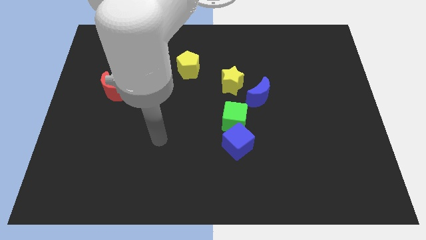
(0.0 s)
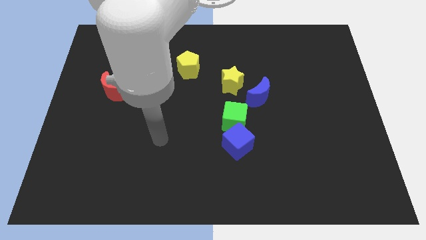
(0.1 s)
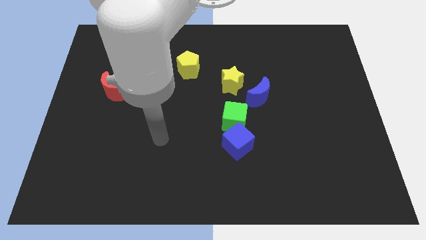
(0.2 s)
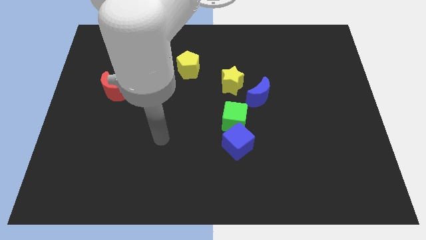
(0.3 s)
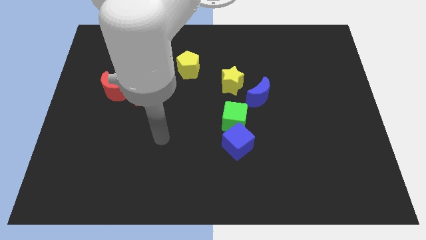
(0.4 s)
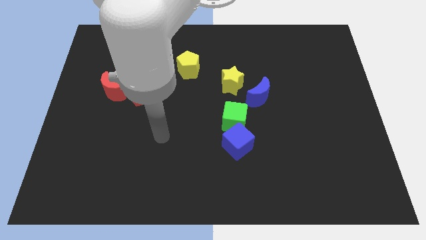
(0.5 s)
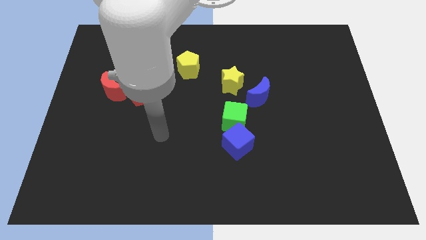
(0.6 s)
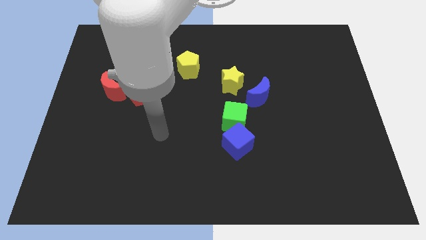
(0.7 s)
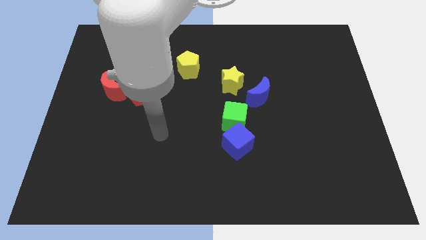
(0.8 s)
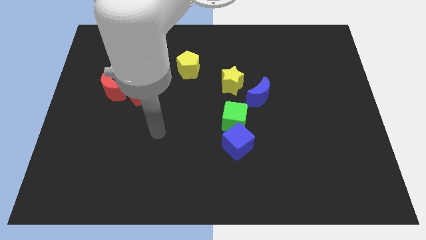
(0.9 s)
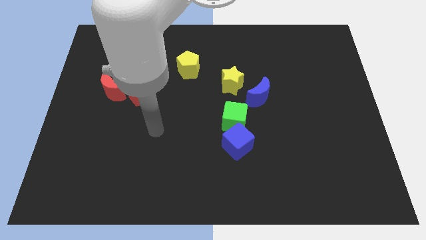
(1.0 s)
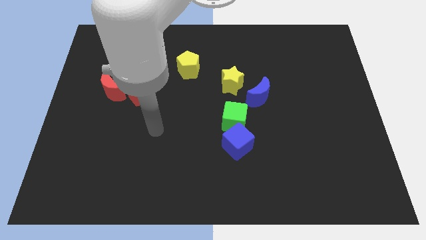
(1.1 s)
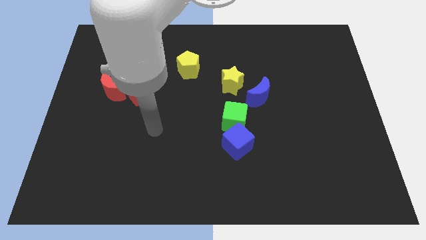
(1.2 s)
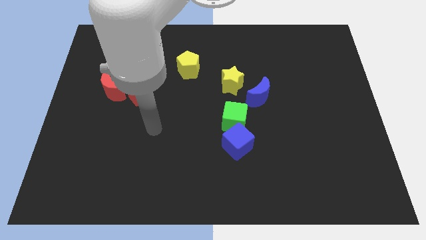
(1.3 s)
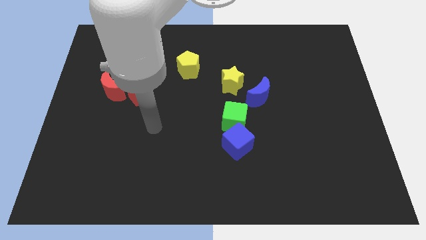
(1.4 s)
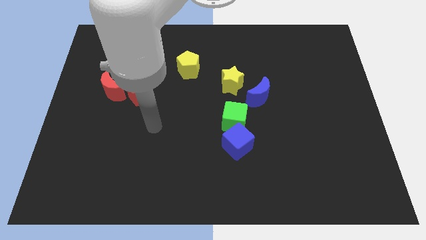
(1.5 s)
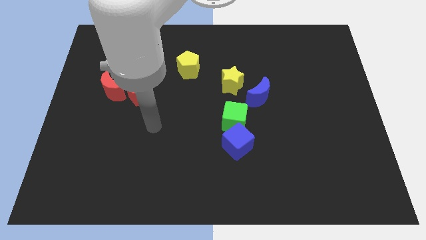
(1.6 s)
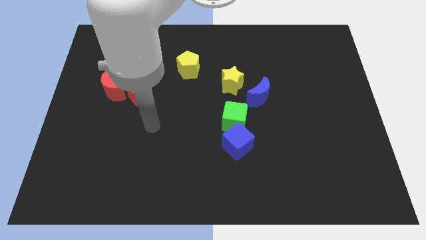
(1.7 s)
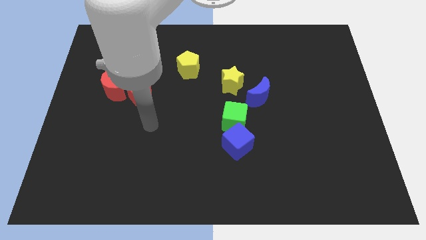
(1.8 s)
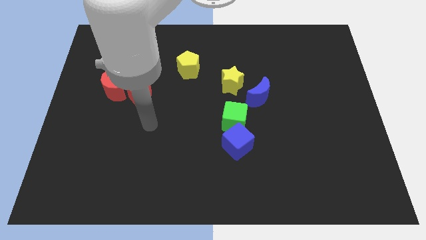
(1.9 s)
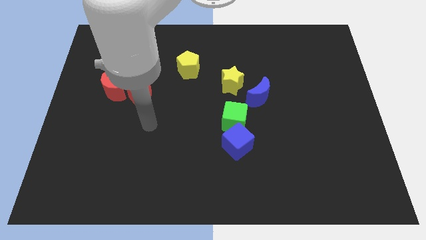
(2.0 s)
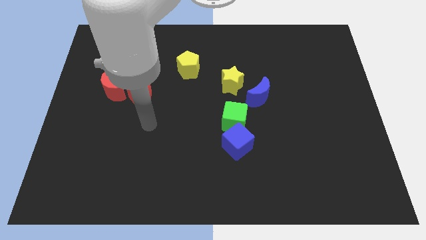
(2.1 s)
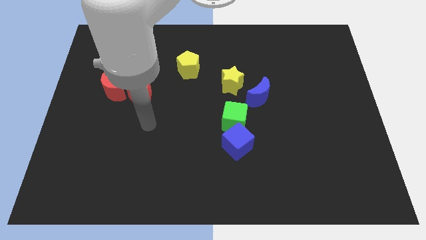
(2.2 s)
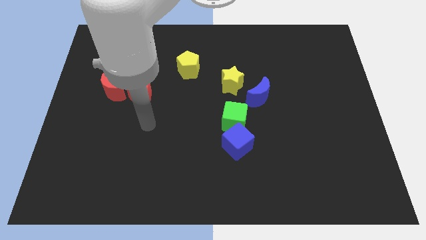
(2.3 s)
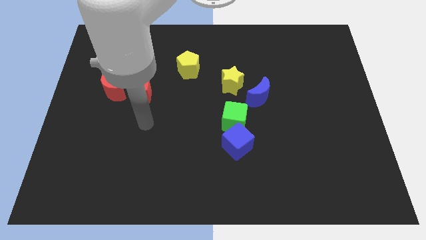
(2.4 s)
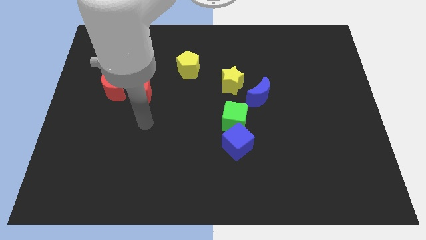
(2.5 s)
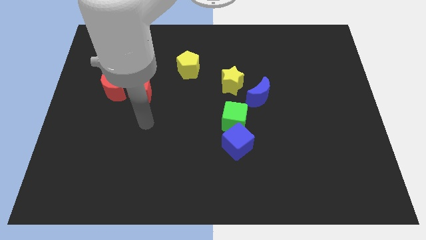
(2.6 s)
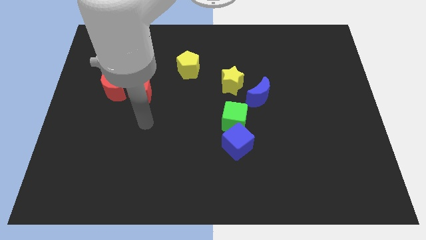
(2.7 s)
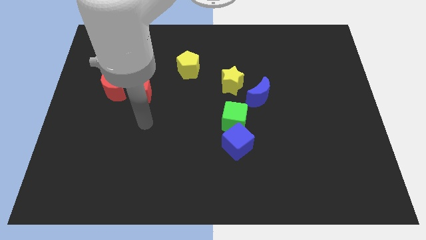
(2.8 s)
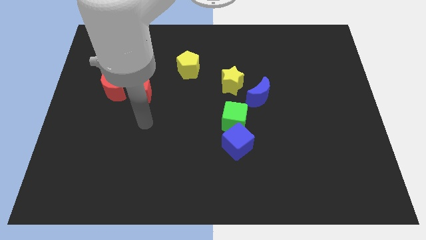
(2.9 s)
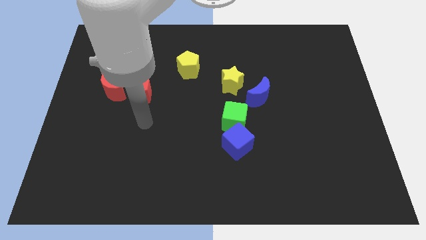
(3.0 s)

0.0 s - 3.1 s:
move arm below the red pentagon

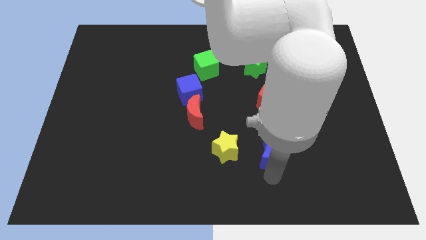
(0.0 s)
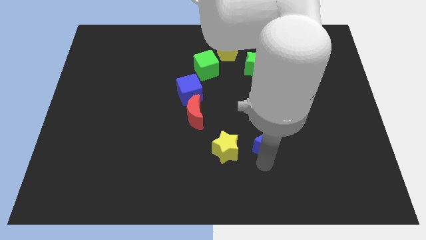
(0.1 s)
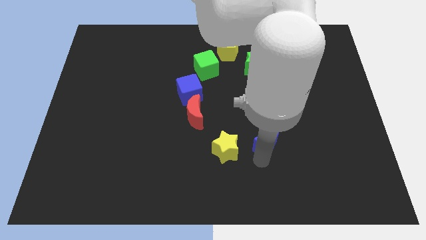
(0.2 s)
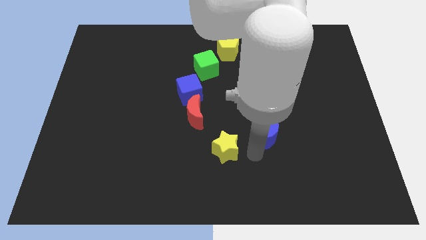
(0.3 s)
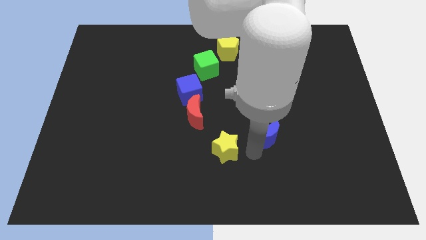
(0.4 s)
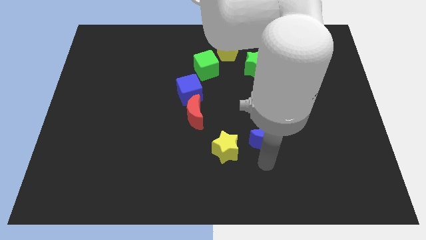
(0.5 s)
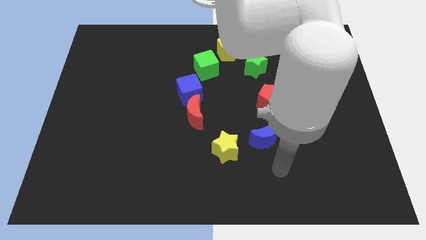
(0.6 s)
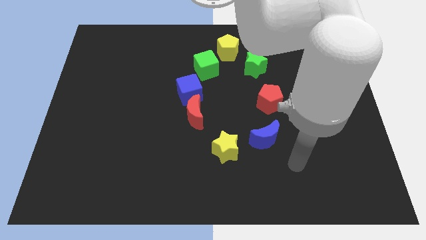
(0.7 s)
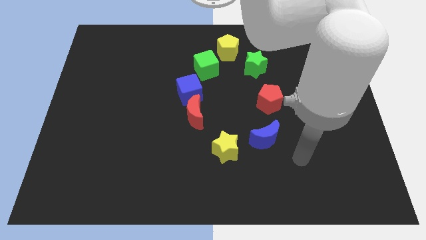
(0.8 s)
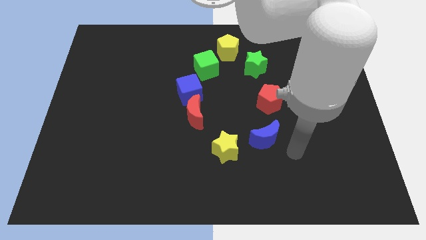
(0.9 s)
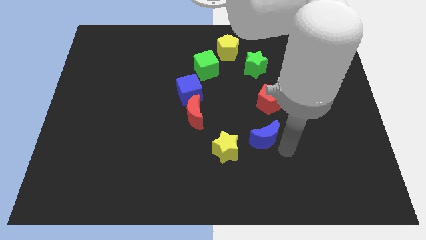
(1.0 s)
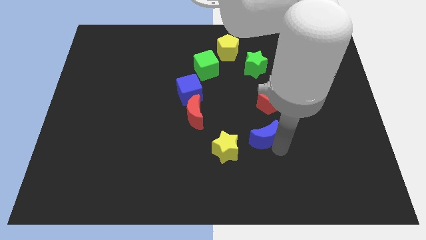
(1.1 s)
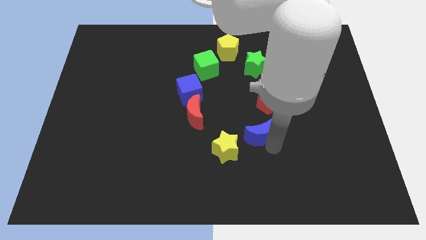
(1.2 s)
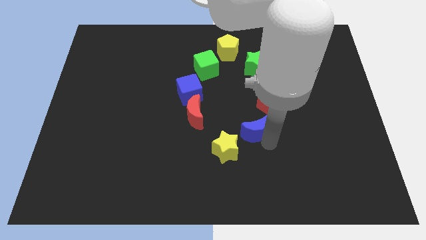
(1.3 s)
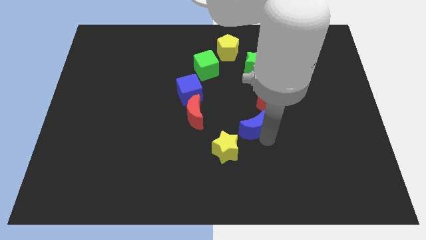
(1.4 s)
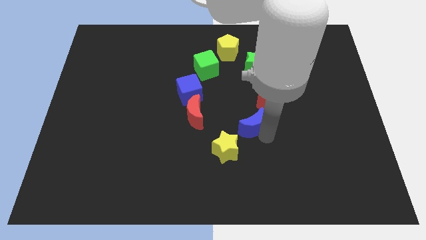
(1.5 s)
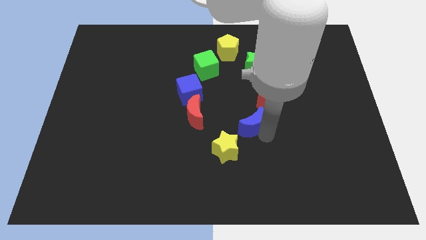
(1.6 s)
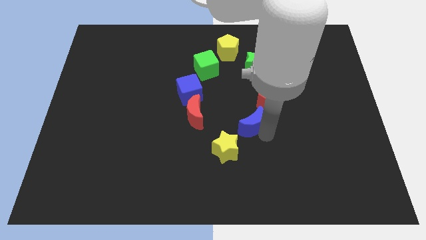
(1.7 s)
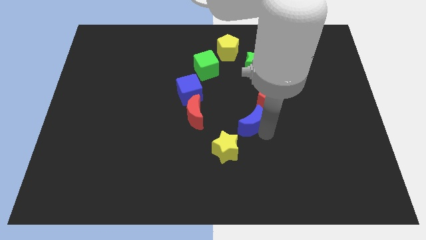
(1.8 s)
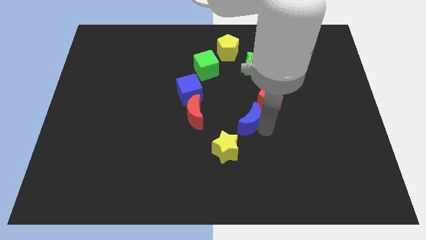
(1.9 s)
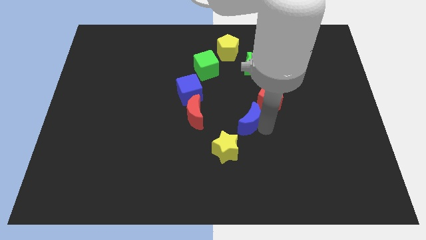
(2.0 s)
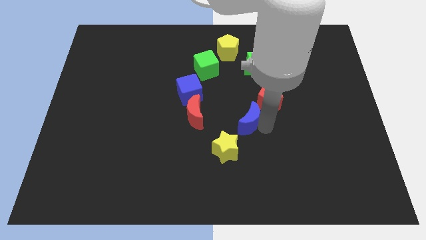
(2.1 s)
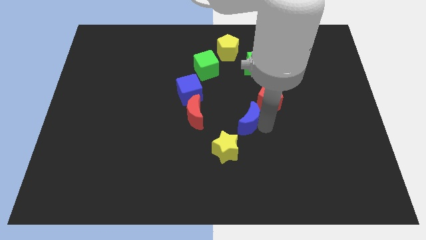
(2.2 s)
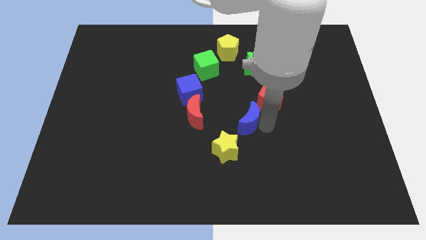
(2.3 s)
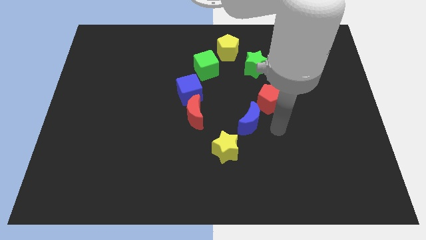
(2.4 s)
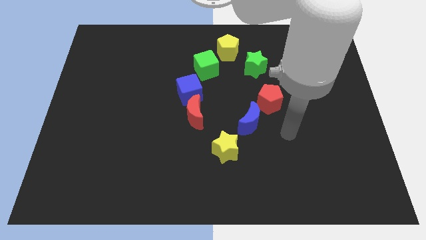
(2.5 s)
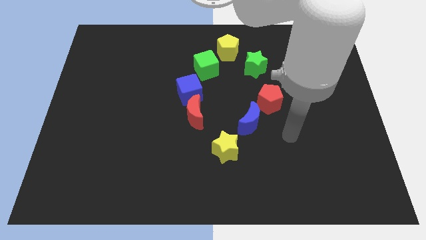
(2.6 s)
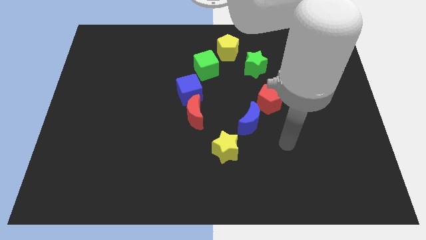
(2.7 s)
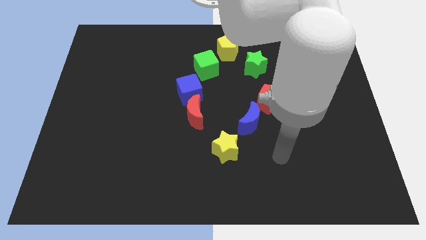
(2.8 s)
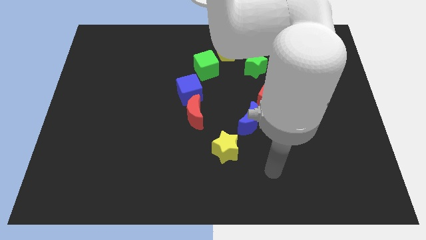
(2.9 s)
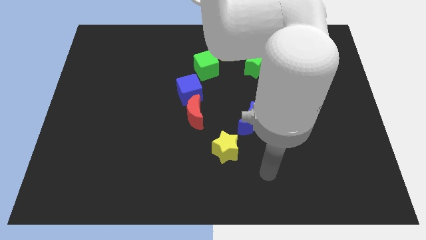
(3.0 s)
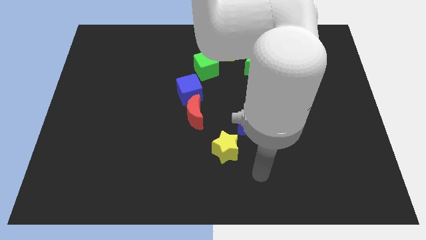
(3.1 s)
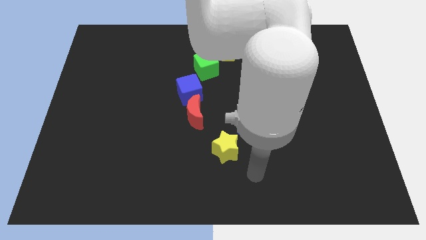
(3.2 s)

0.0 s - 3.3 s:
put the blue crescent diagonally in between the red pentagon and yellow star

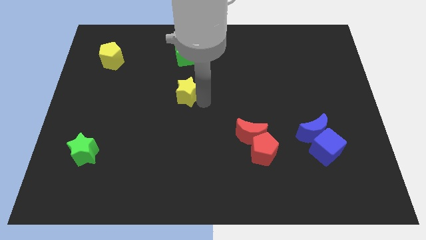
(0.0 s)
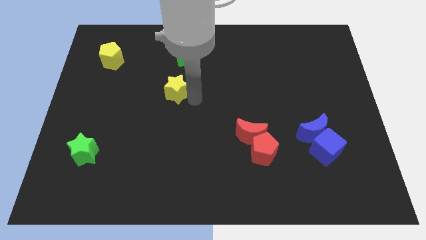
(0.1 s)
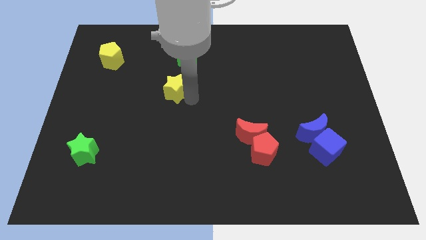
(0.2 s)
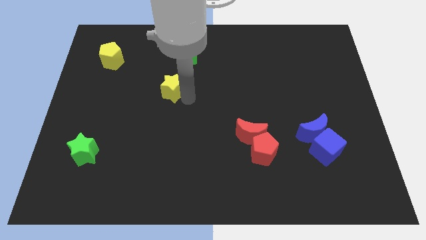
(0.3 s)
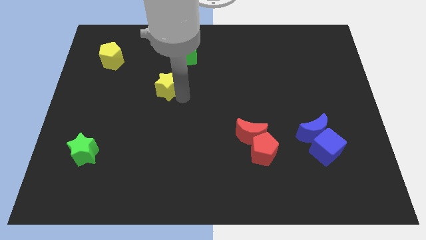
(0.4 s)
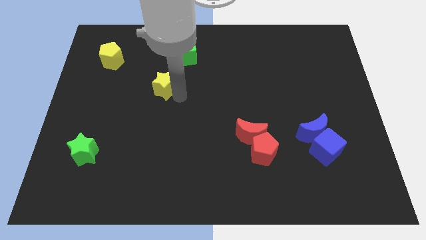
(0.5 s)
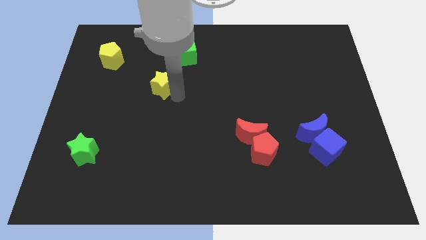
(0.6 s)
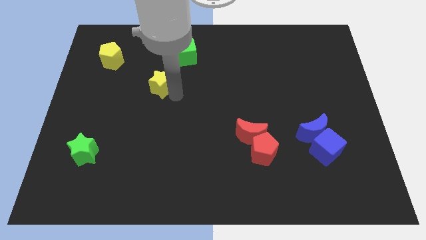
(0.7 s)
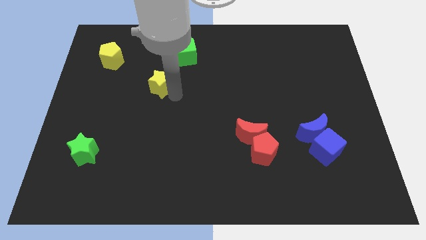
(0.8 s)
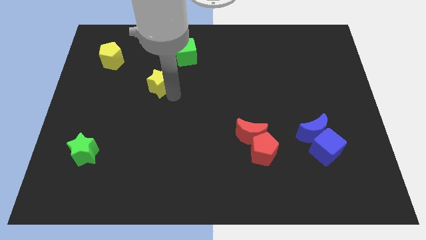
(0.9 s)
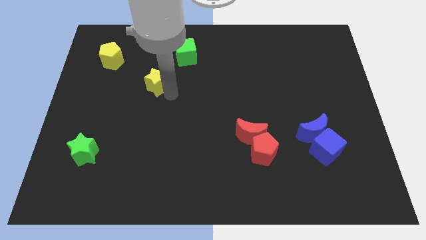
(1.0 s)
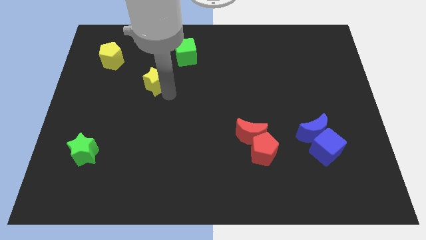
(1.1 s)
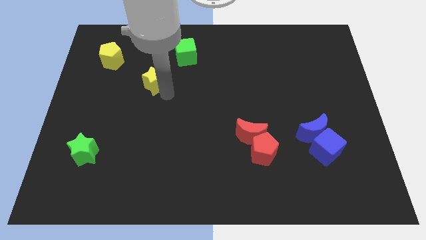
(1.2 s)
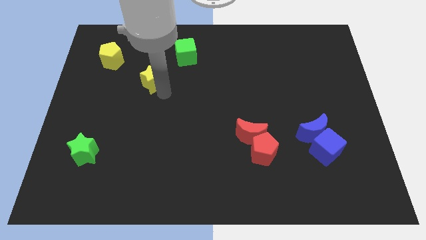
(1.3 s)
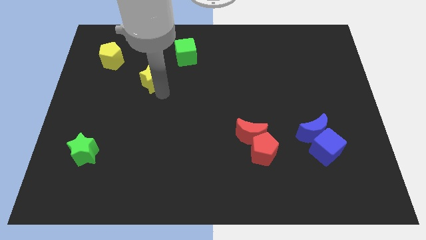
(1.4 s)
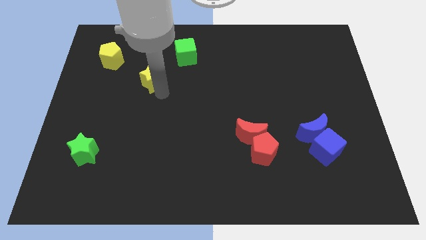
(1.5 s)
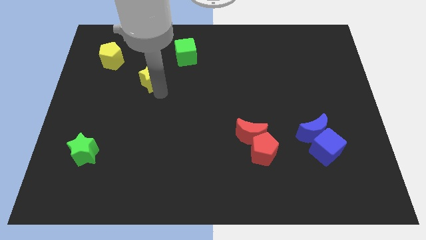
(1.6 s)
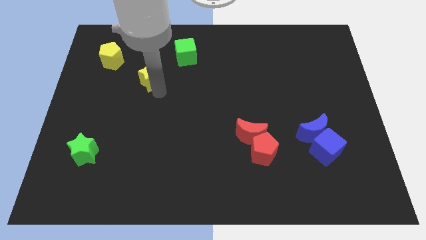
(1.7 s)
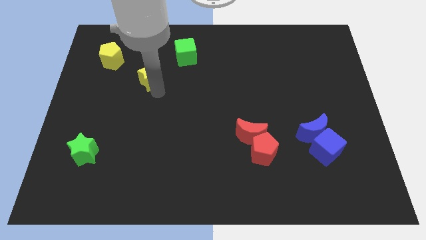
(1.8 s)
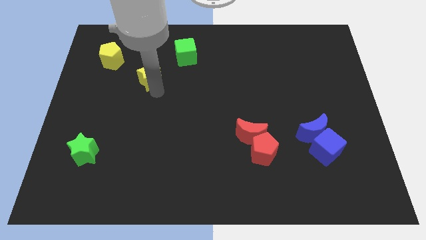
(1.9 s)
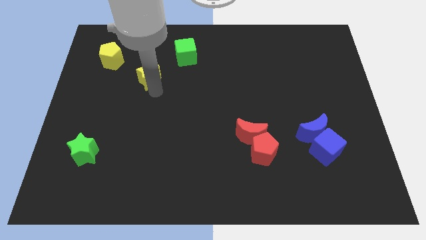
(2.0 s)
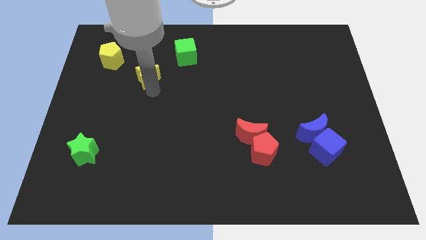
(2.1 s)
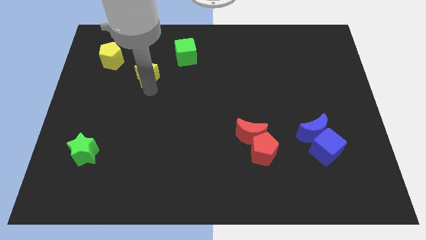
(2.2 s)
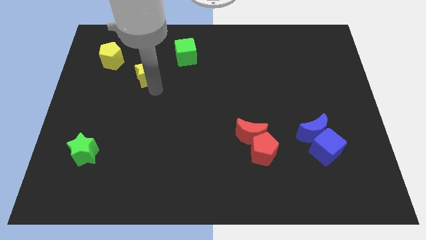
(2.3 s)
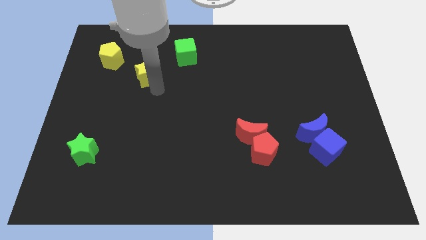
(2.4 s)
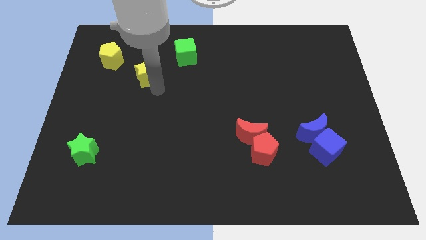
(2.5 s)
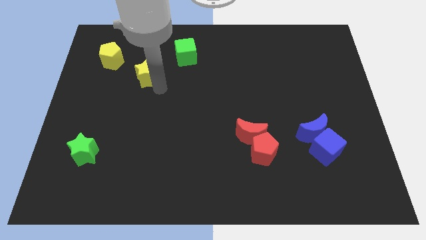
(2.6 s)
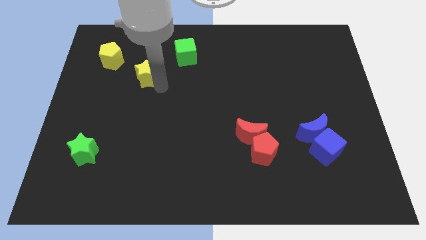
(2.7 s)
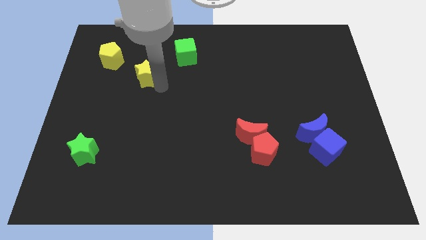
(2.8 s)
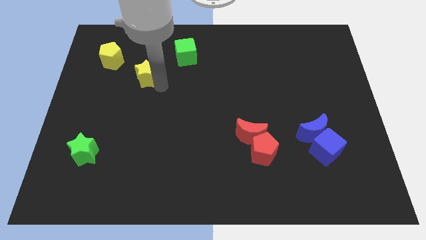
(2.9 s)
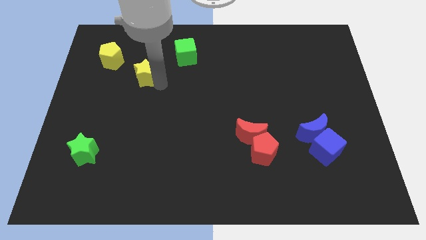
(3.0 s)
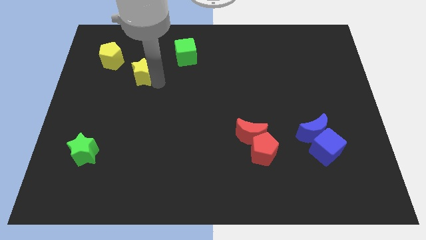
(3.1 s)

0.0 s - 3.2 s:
slide the yellow star diagonally bottom left to the green cube
